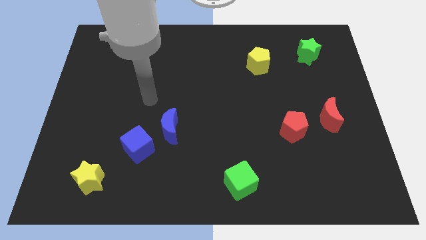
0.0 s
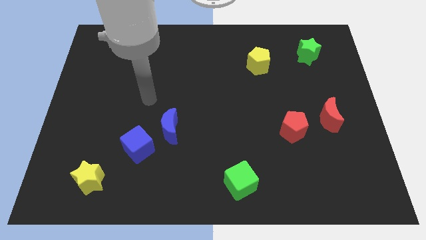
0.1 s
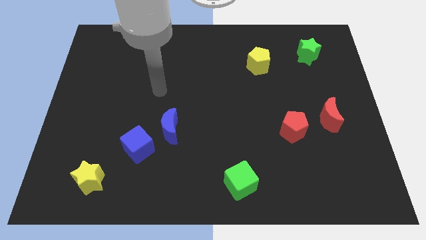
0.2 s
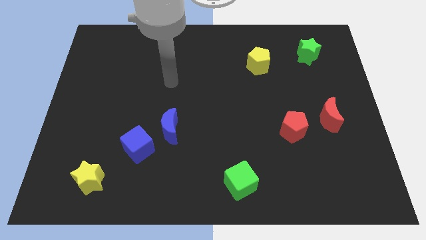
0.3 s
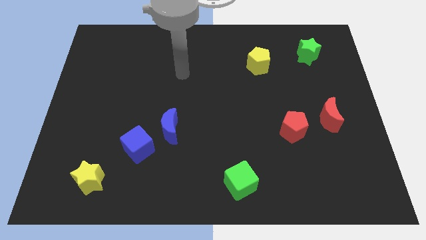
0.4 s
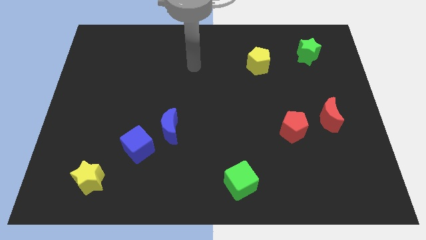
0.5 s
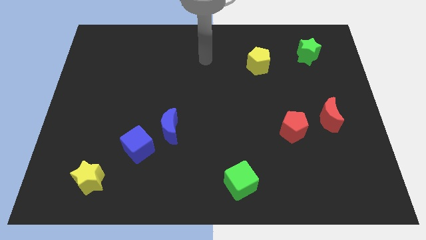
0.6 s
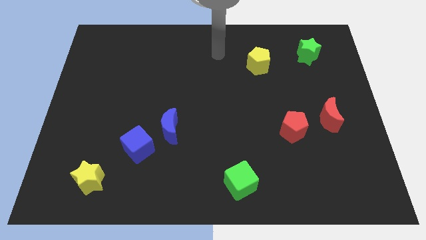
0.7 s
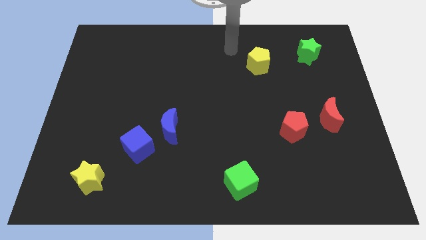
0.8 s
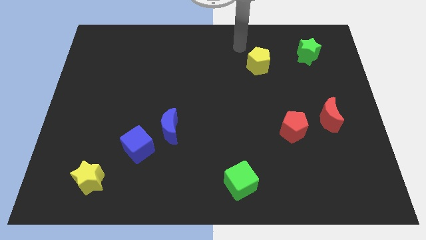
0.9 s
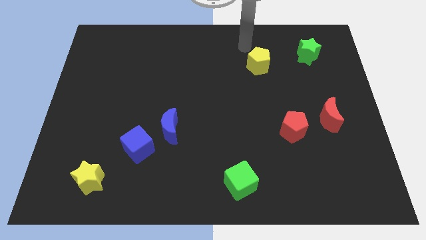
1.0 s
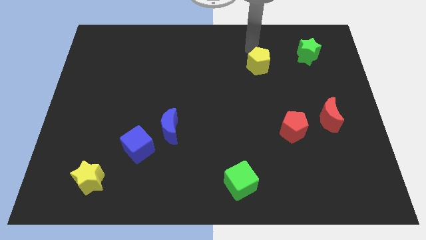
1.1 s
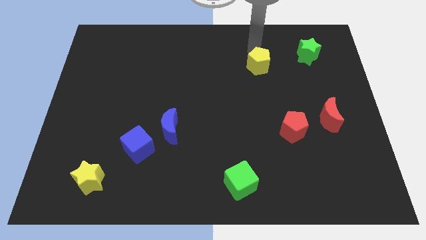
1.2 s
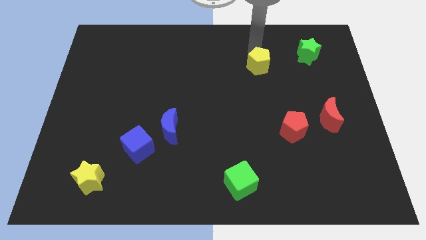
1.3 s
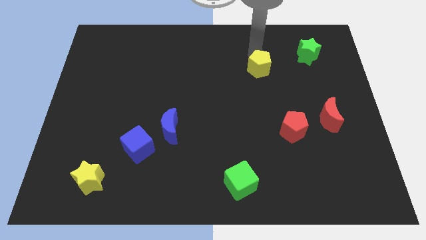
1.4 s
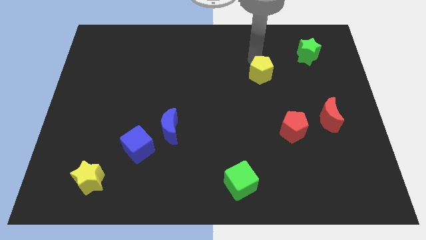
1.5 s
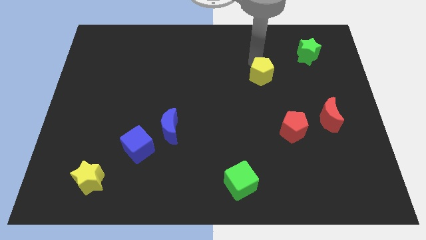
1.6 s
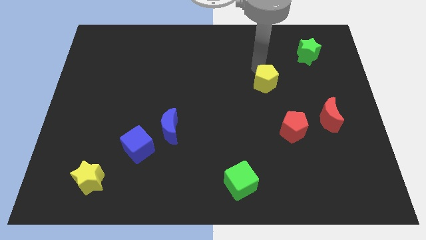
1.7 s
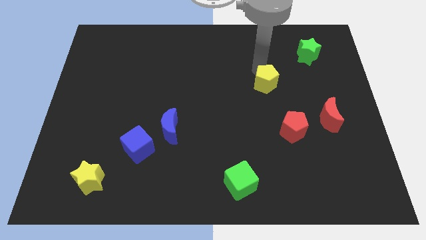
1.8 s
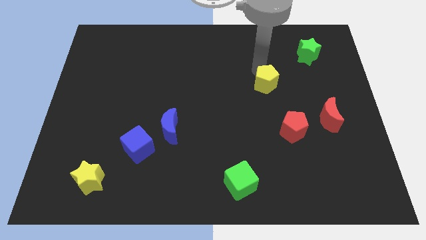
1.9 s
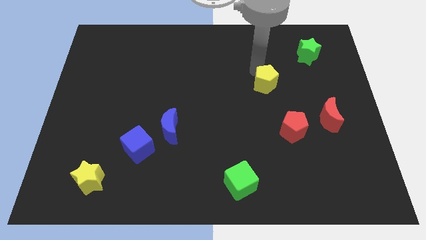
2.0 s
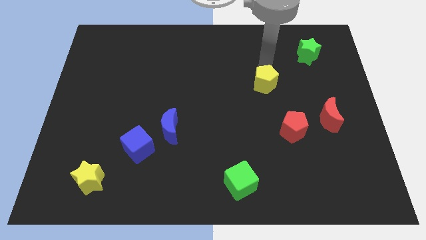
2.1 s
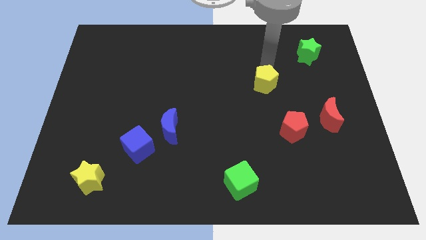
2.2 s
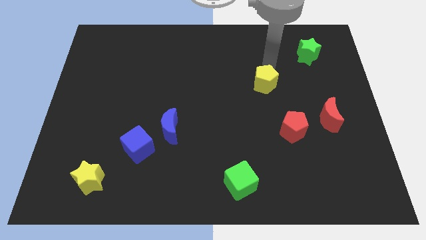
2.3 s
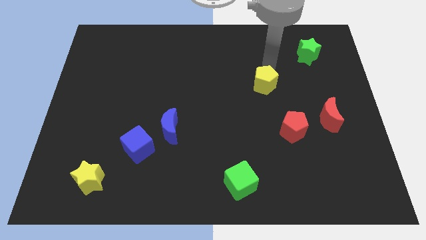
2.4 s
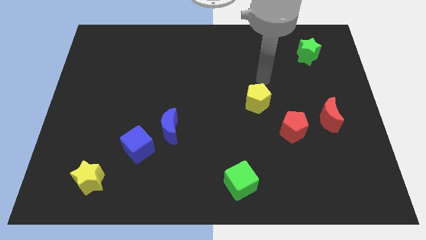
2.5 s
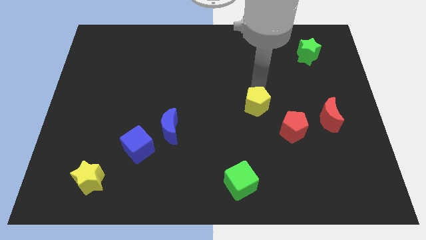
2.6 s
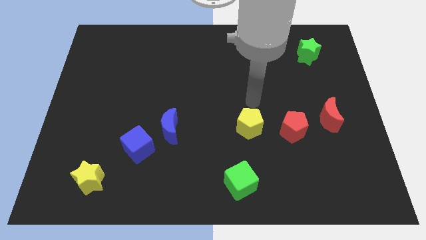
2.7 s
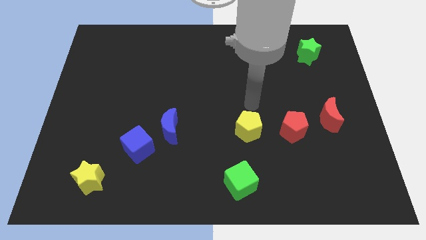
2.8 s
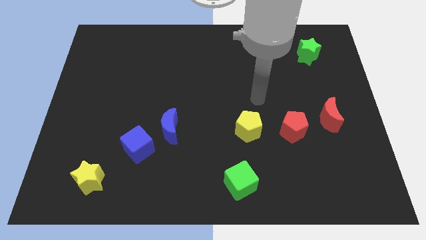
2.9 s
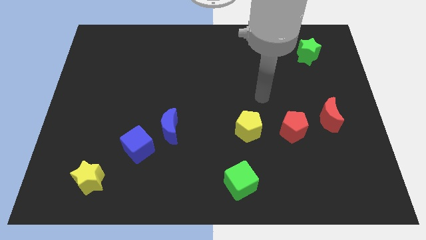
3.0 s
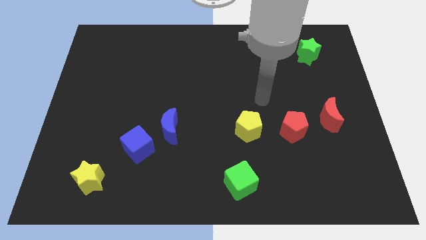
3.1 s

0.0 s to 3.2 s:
push the yellow pentagon vertical to the green cube

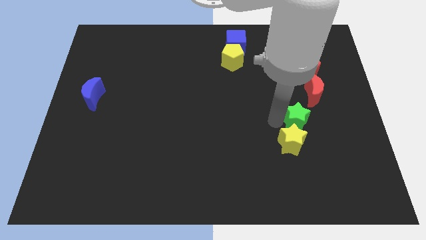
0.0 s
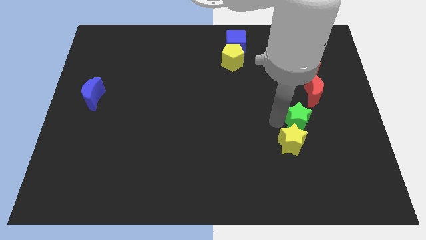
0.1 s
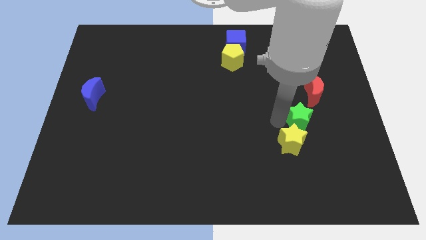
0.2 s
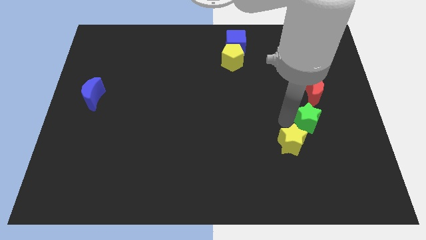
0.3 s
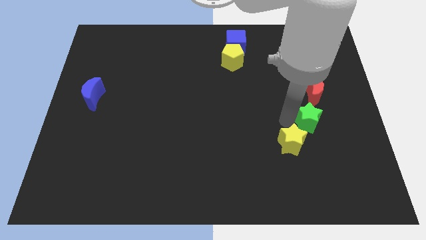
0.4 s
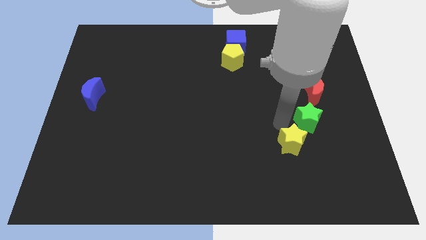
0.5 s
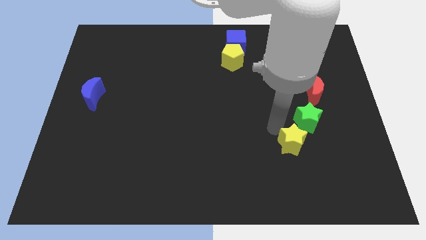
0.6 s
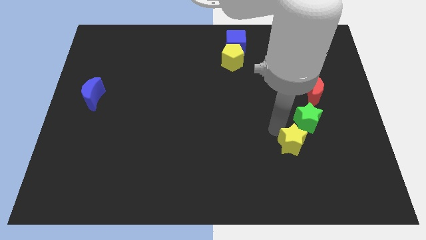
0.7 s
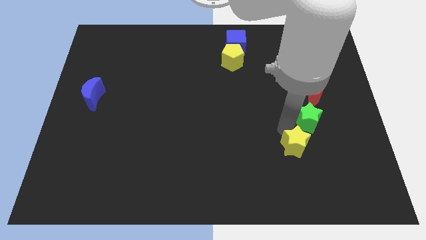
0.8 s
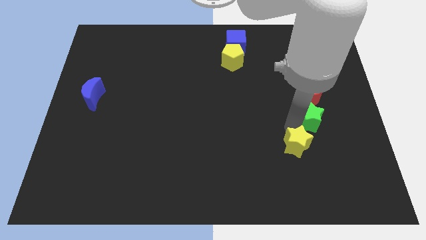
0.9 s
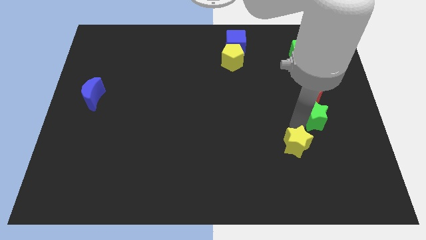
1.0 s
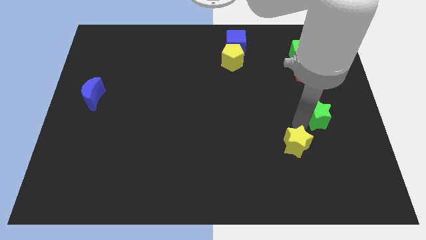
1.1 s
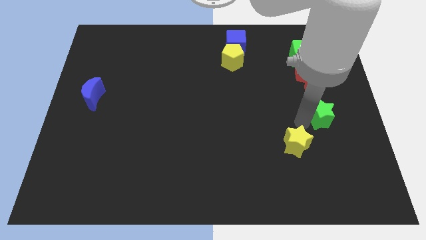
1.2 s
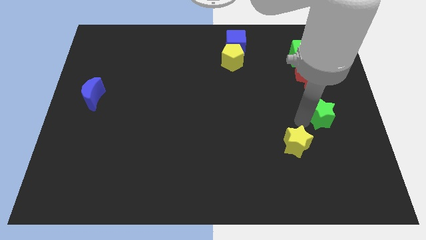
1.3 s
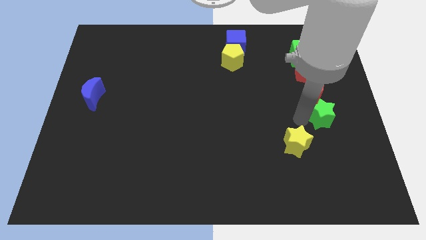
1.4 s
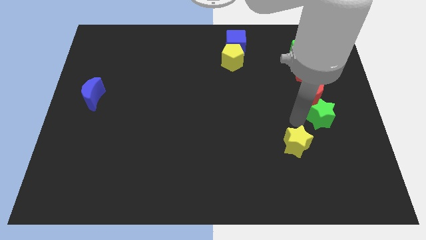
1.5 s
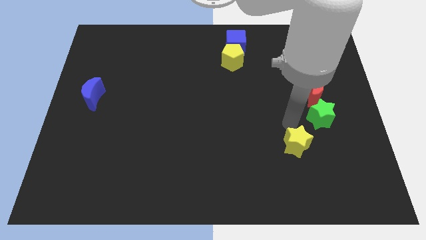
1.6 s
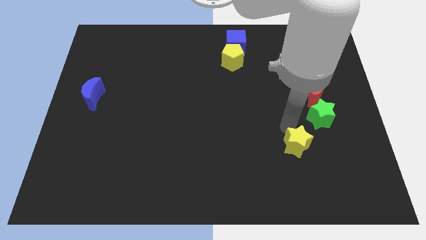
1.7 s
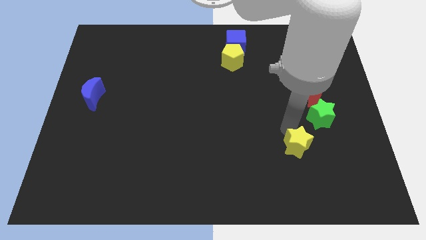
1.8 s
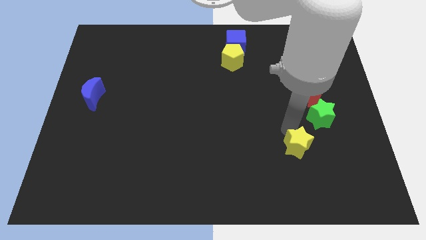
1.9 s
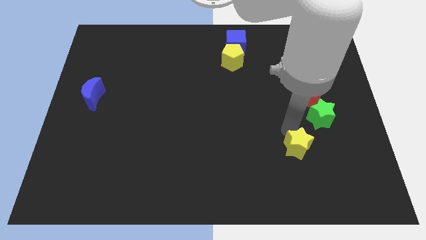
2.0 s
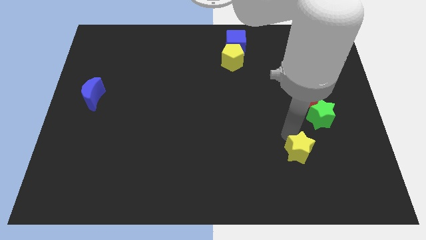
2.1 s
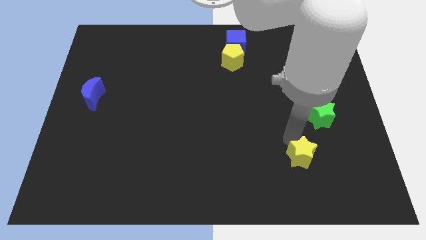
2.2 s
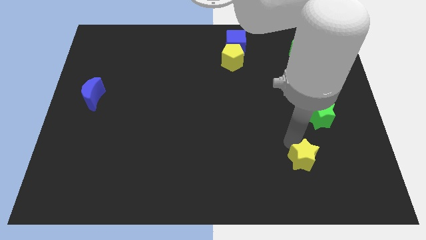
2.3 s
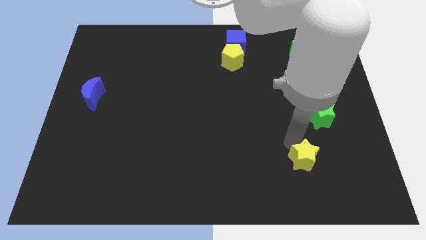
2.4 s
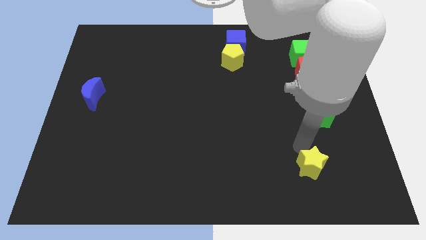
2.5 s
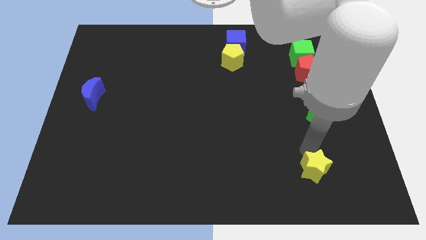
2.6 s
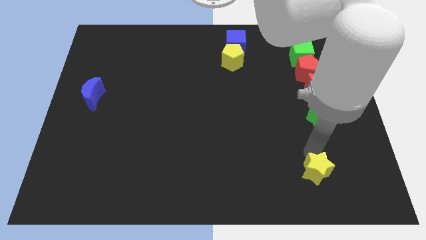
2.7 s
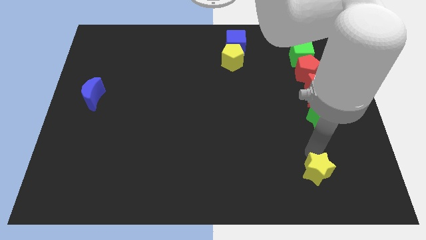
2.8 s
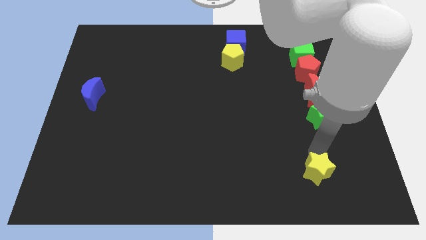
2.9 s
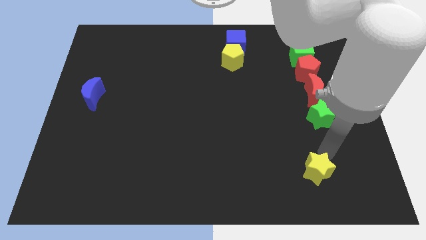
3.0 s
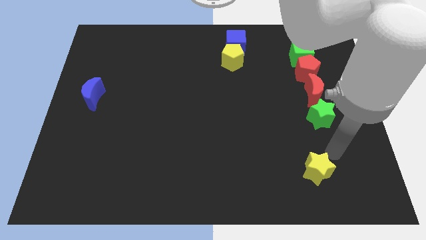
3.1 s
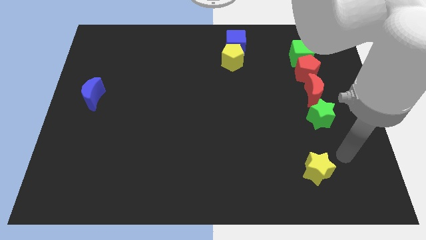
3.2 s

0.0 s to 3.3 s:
place the green star below the red crescent

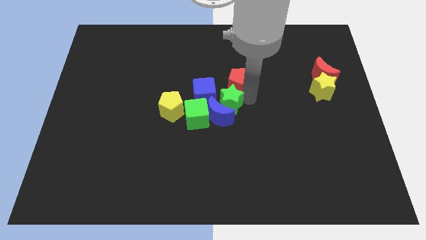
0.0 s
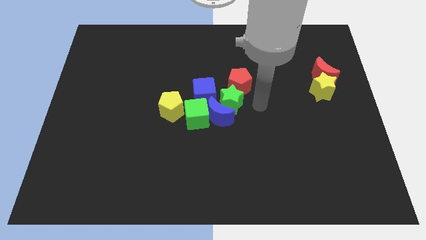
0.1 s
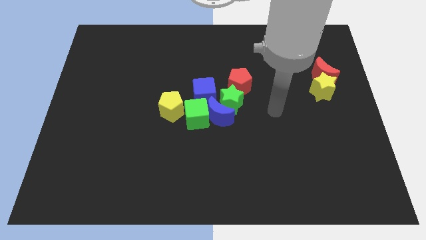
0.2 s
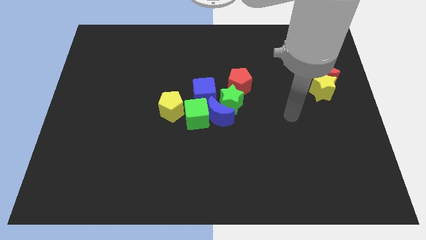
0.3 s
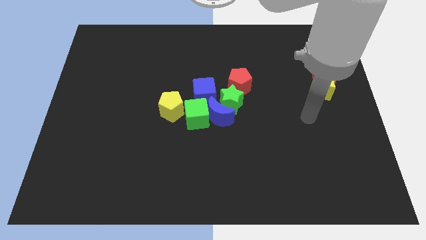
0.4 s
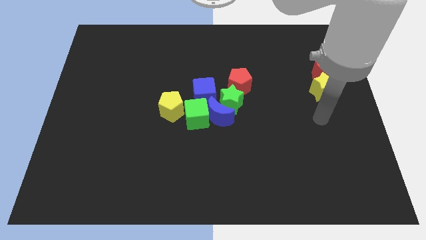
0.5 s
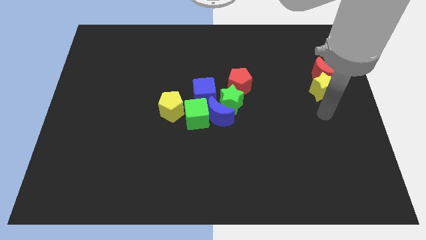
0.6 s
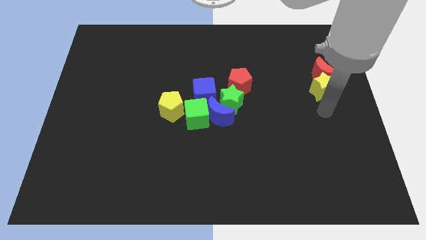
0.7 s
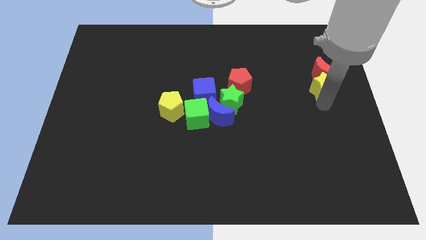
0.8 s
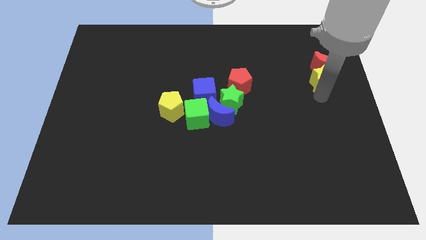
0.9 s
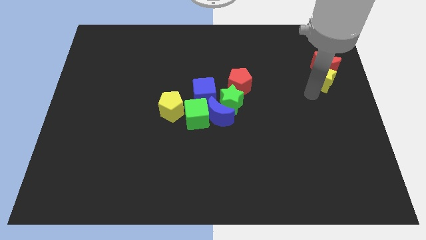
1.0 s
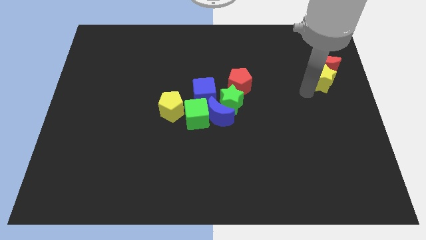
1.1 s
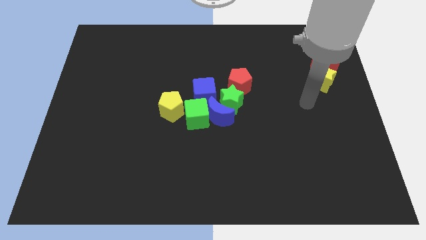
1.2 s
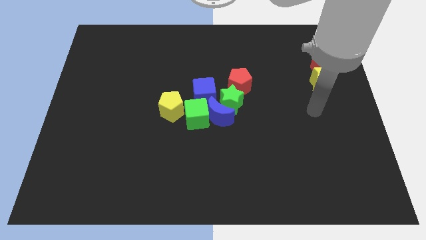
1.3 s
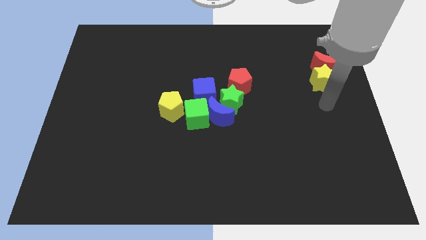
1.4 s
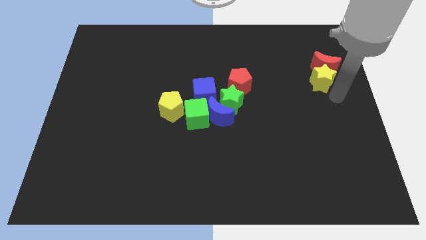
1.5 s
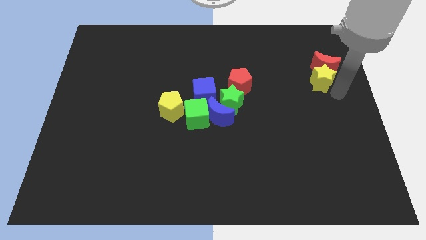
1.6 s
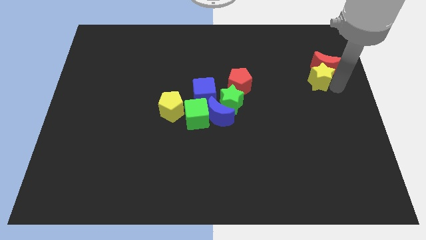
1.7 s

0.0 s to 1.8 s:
push the yellow star and red moon slightly upwards

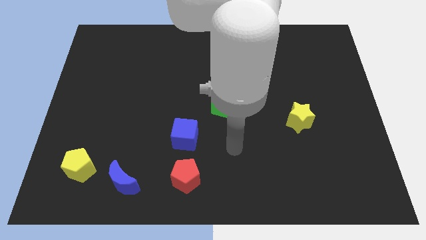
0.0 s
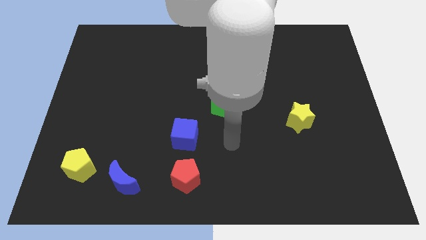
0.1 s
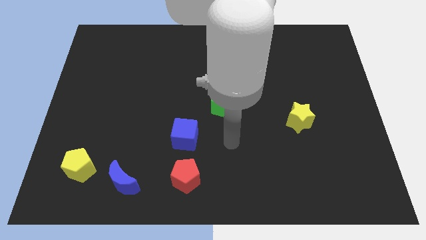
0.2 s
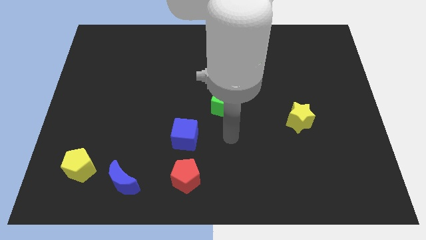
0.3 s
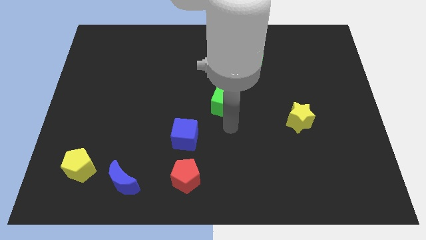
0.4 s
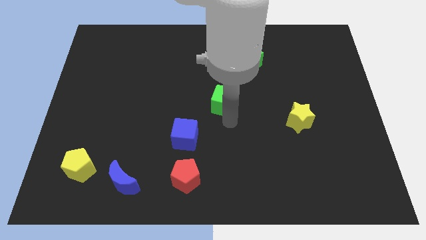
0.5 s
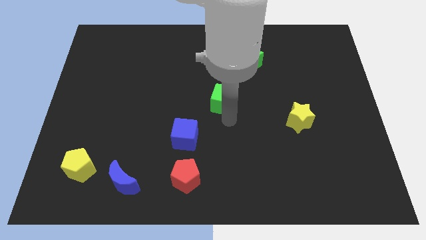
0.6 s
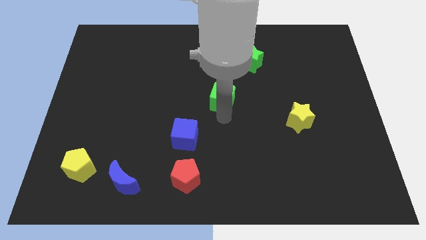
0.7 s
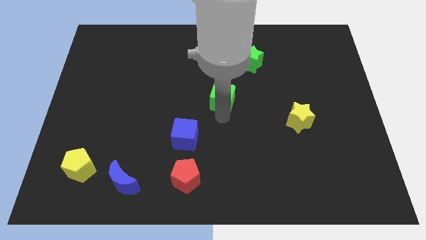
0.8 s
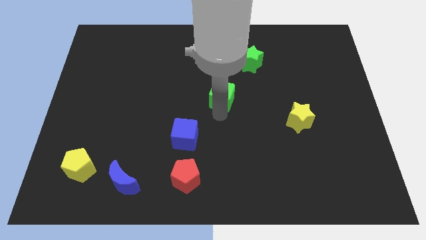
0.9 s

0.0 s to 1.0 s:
place the green cube between the green star and blue cube
